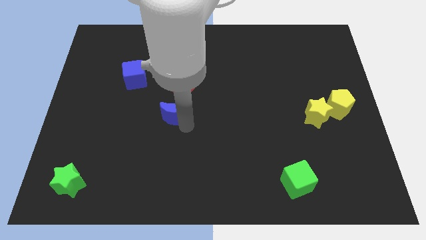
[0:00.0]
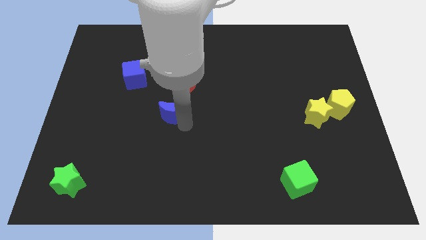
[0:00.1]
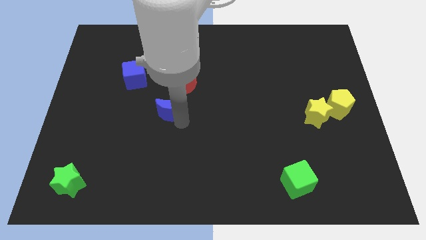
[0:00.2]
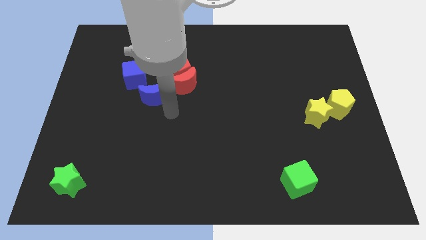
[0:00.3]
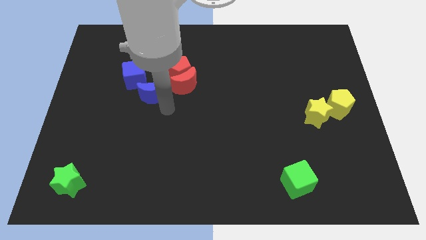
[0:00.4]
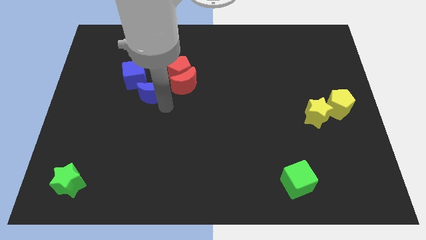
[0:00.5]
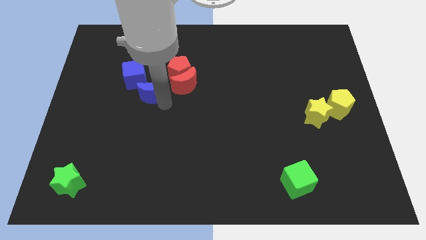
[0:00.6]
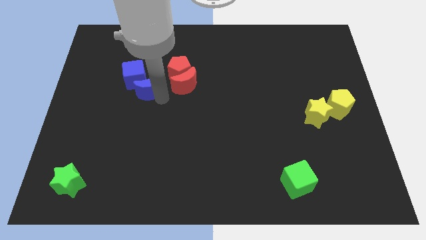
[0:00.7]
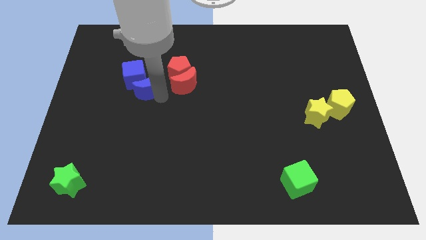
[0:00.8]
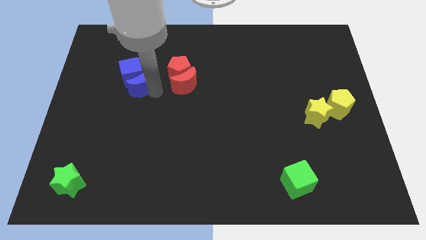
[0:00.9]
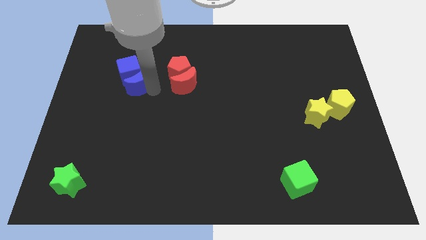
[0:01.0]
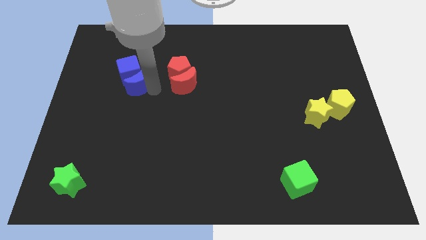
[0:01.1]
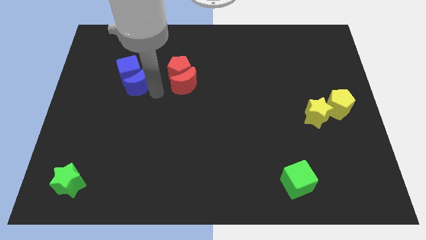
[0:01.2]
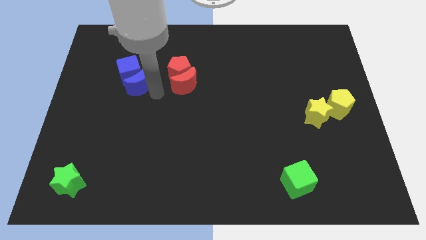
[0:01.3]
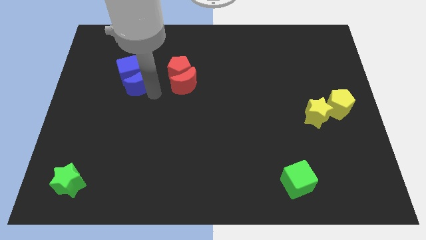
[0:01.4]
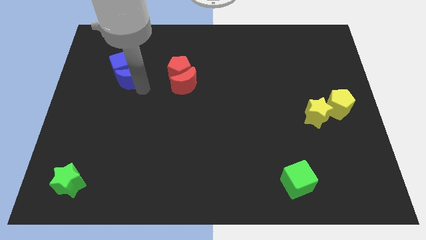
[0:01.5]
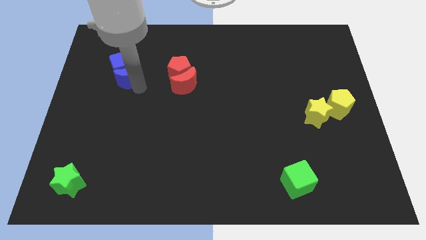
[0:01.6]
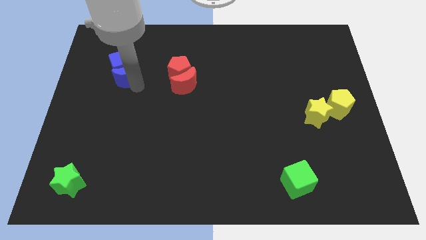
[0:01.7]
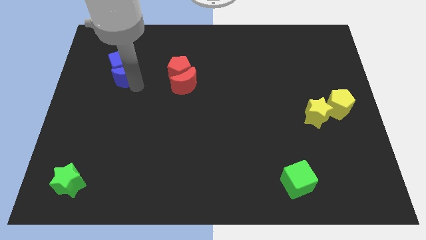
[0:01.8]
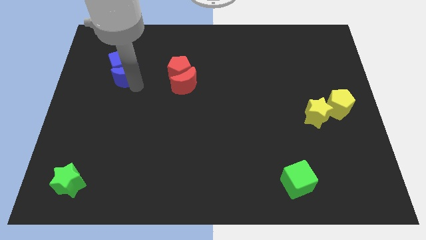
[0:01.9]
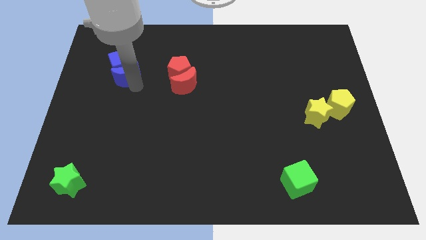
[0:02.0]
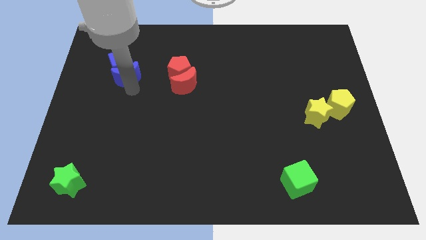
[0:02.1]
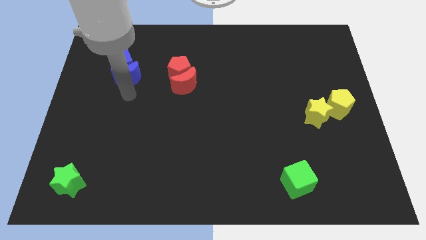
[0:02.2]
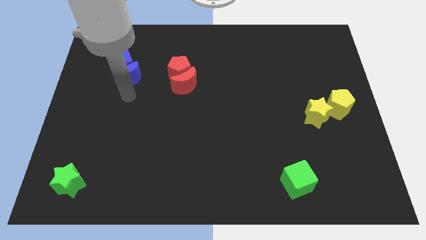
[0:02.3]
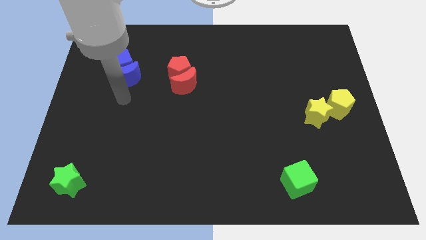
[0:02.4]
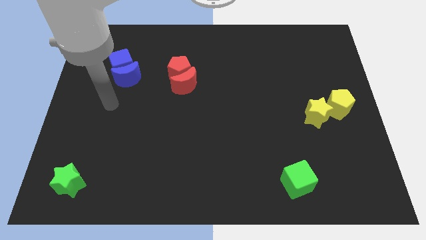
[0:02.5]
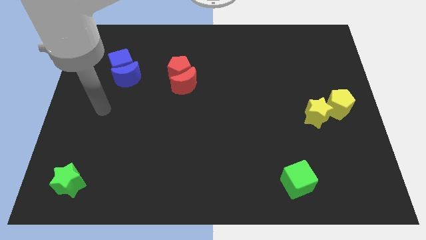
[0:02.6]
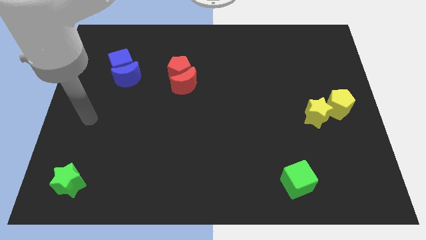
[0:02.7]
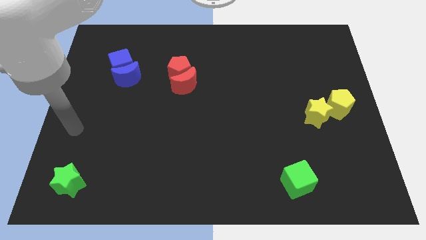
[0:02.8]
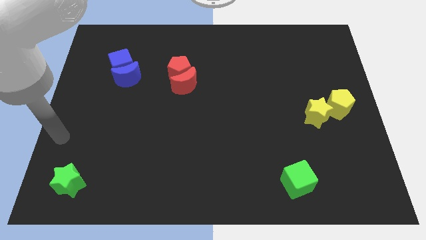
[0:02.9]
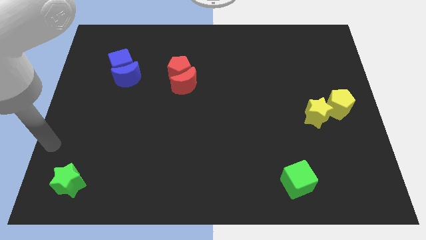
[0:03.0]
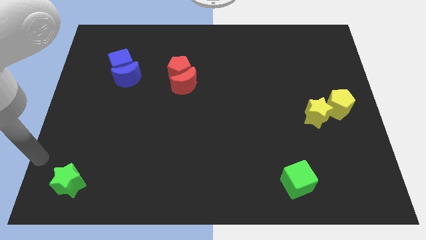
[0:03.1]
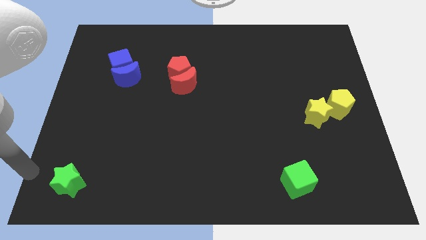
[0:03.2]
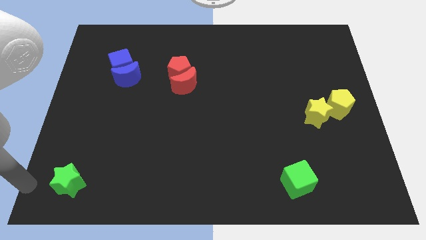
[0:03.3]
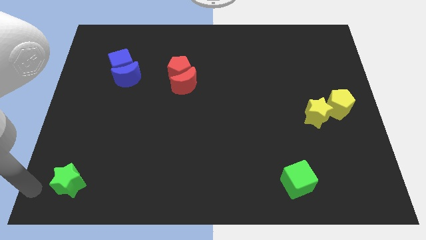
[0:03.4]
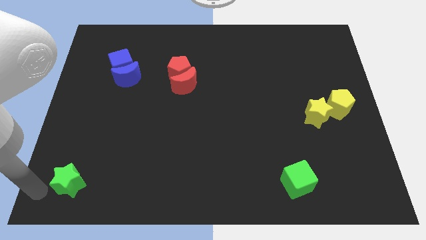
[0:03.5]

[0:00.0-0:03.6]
push the blue cube with the blue crescent to the top left of the board

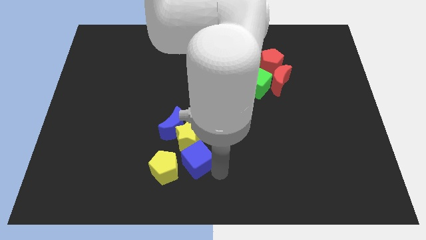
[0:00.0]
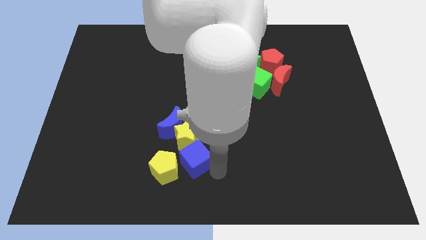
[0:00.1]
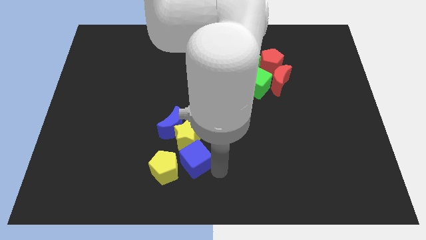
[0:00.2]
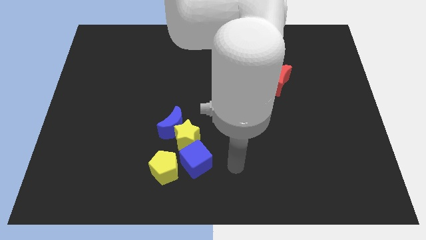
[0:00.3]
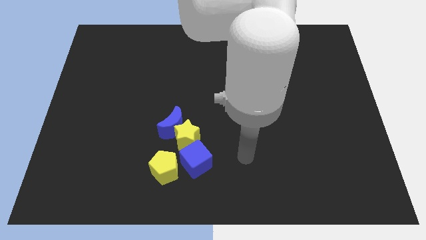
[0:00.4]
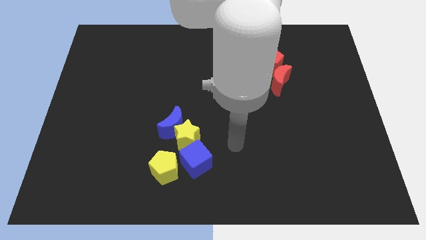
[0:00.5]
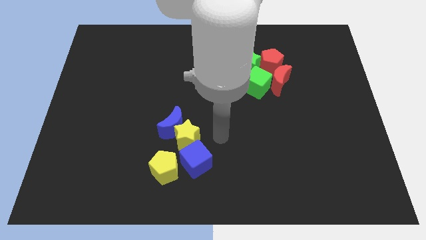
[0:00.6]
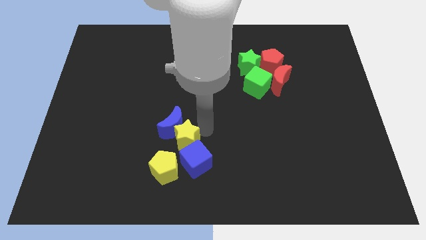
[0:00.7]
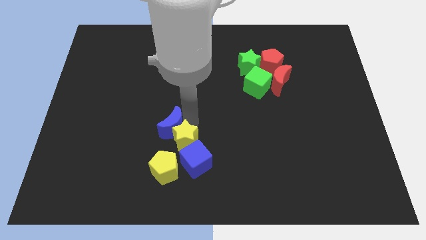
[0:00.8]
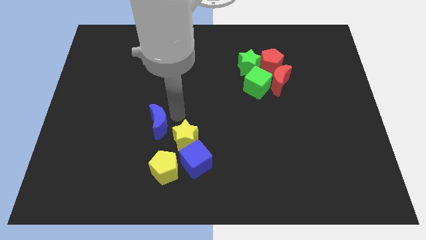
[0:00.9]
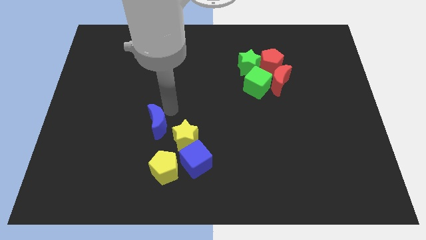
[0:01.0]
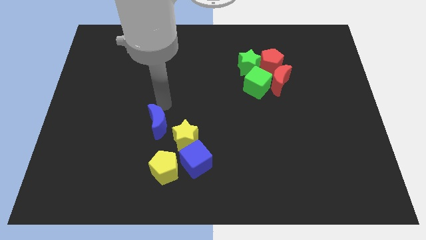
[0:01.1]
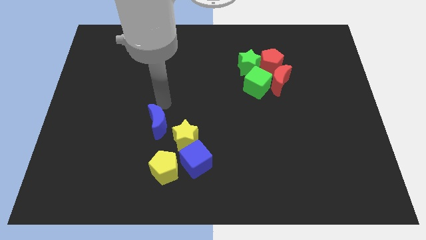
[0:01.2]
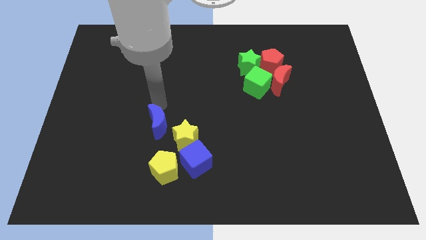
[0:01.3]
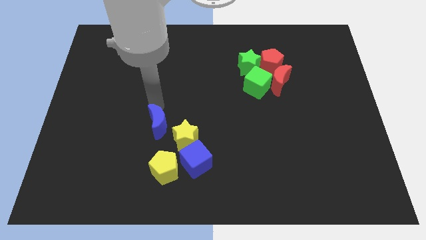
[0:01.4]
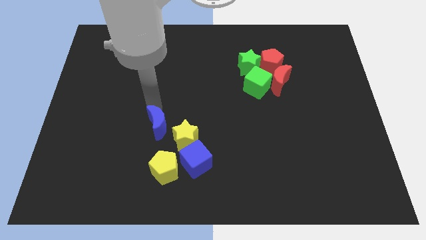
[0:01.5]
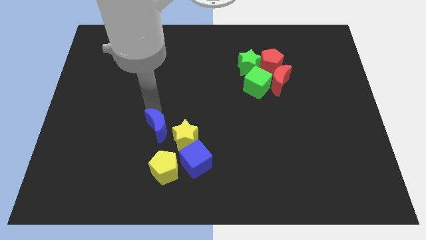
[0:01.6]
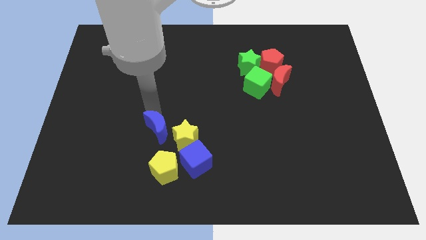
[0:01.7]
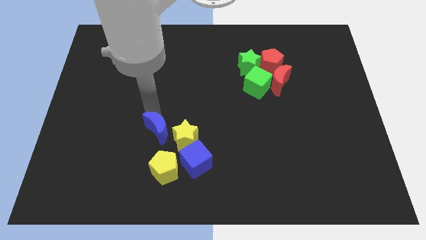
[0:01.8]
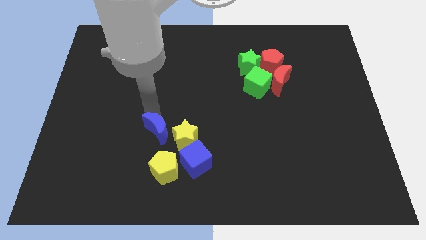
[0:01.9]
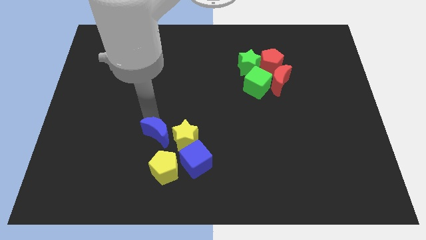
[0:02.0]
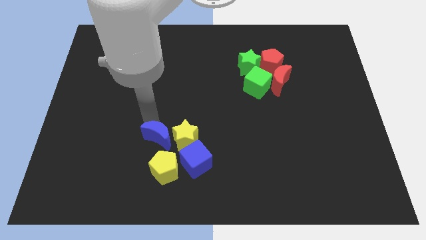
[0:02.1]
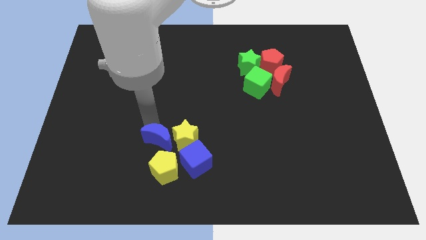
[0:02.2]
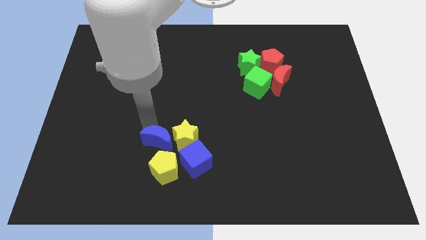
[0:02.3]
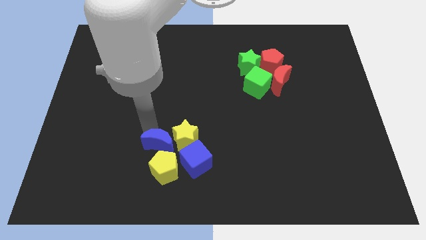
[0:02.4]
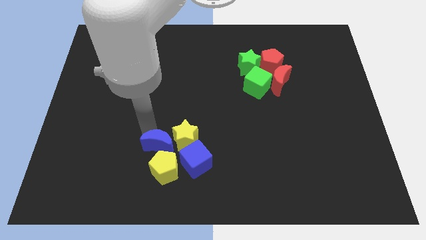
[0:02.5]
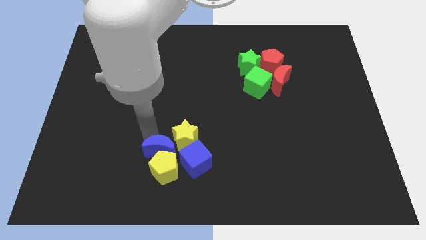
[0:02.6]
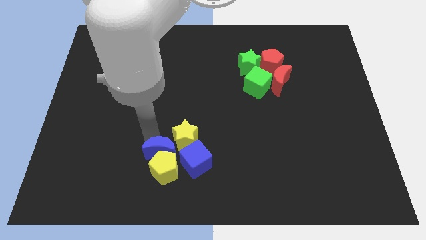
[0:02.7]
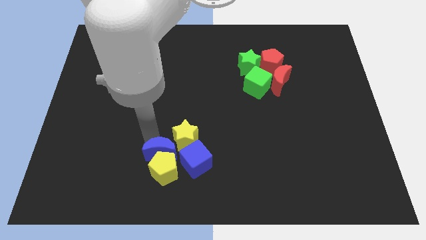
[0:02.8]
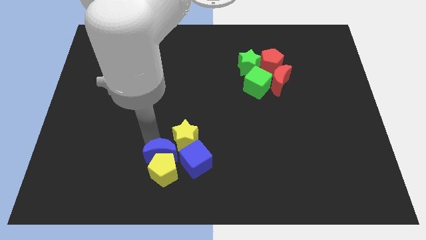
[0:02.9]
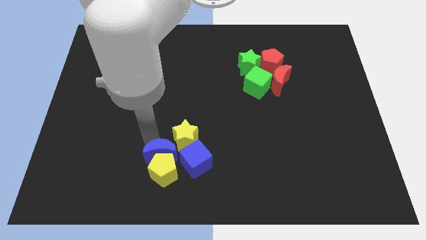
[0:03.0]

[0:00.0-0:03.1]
add blue moon on top of yellow pentagon

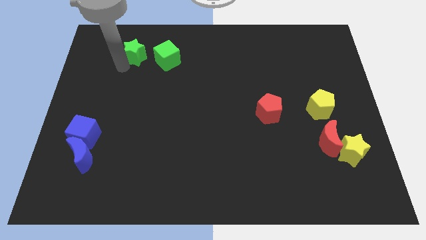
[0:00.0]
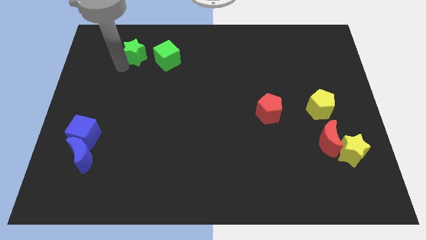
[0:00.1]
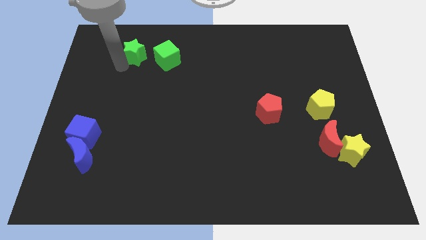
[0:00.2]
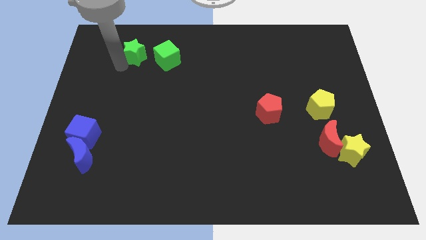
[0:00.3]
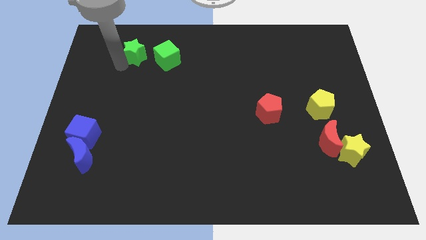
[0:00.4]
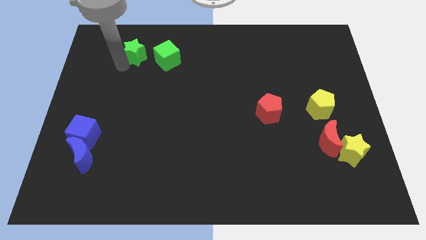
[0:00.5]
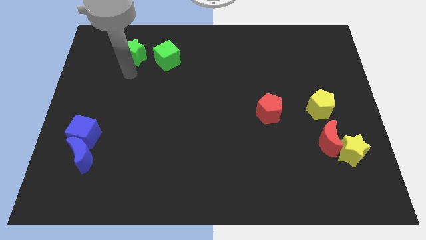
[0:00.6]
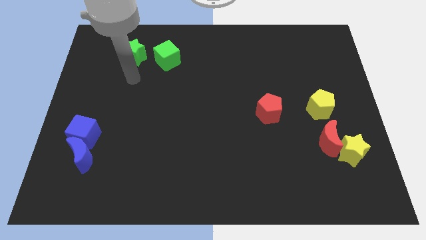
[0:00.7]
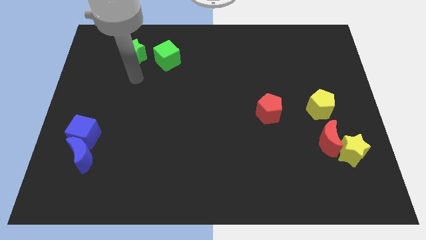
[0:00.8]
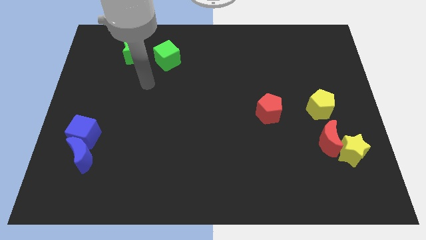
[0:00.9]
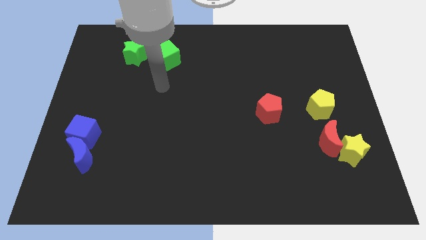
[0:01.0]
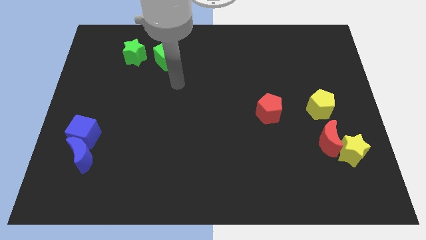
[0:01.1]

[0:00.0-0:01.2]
move arm below the green cube

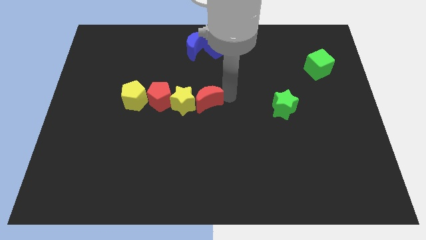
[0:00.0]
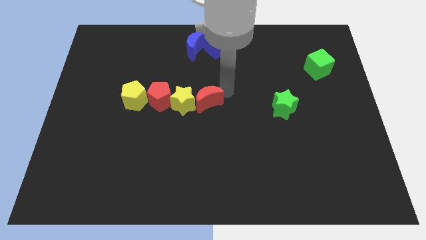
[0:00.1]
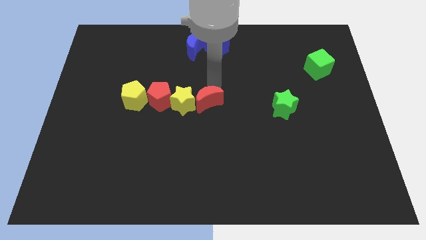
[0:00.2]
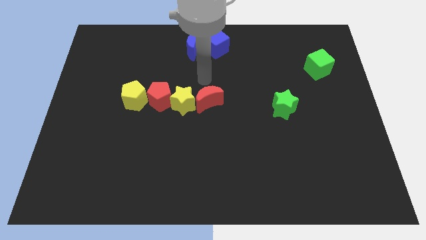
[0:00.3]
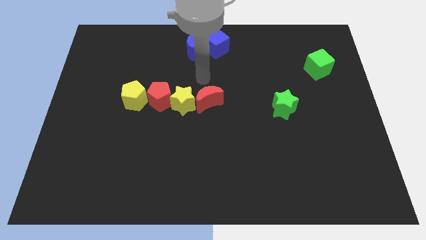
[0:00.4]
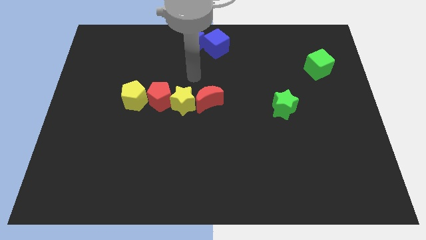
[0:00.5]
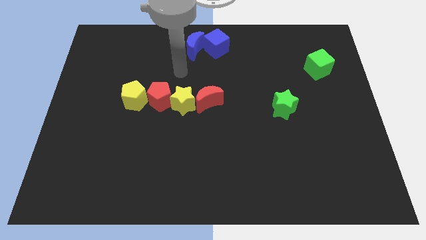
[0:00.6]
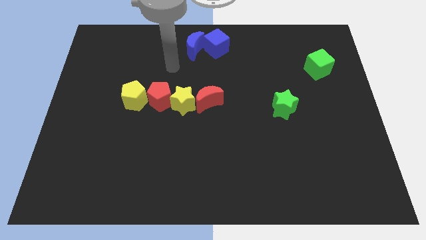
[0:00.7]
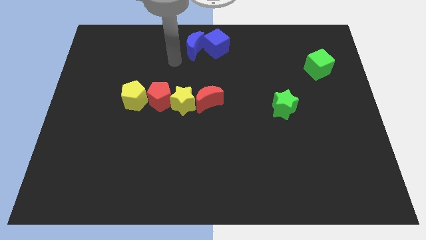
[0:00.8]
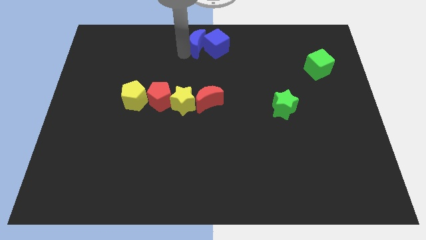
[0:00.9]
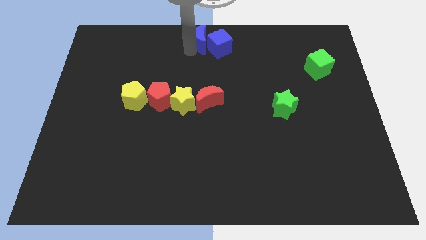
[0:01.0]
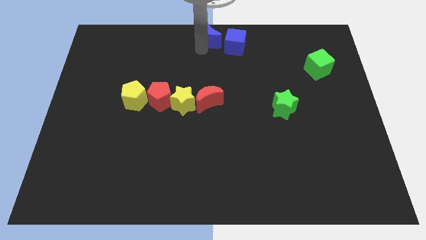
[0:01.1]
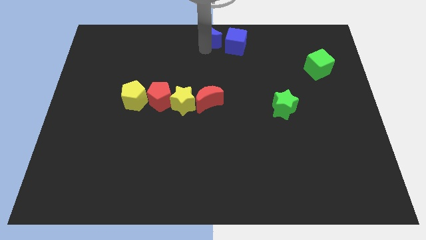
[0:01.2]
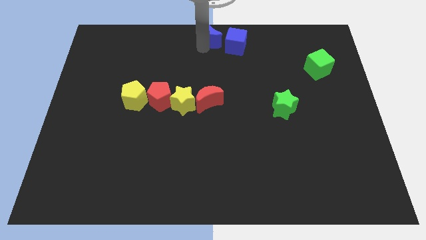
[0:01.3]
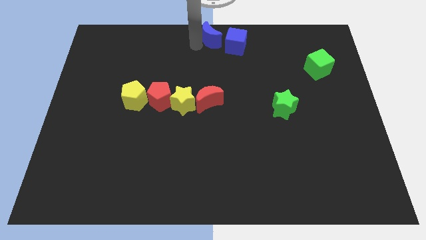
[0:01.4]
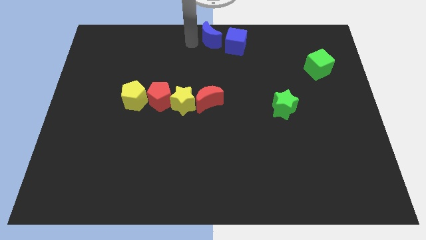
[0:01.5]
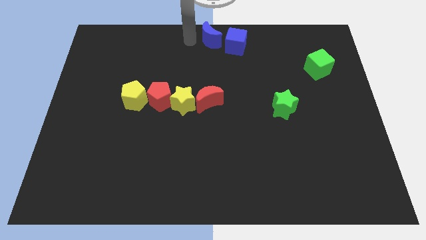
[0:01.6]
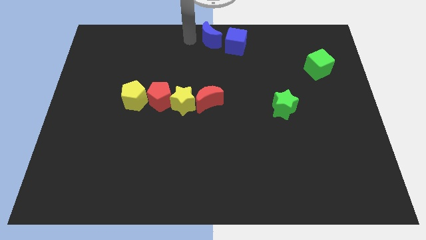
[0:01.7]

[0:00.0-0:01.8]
slightly push the blue crescent towards the blue cube
